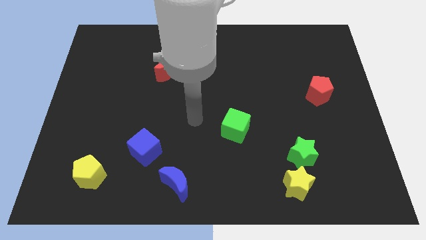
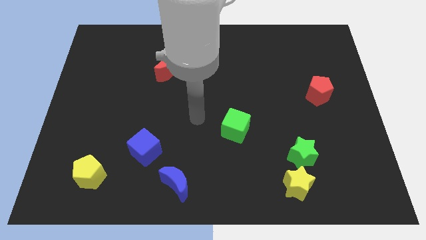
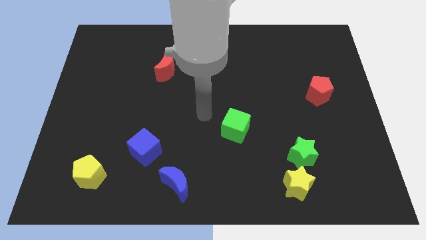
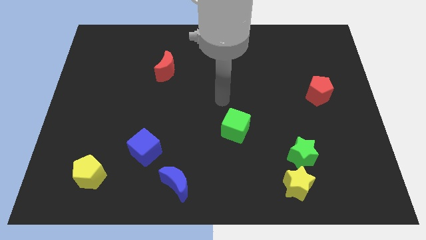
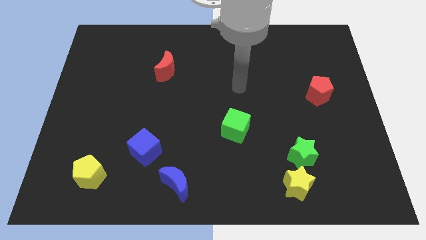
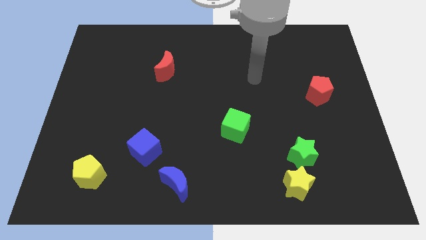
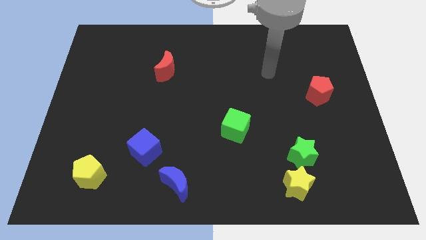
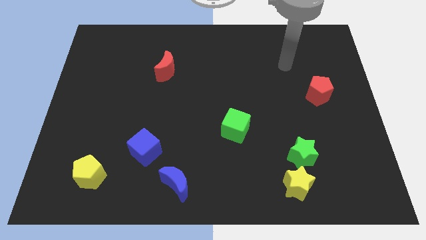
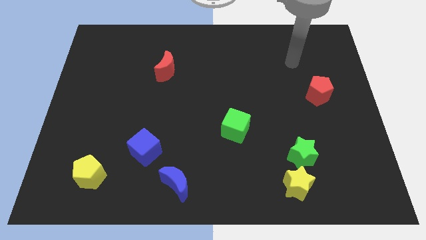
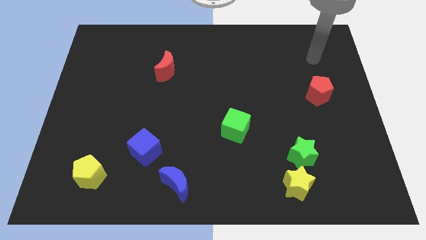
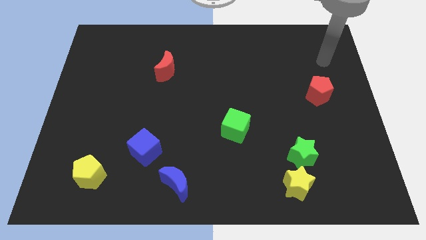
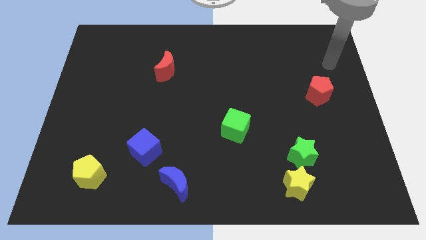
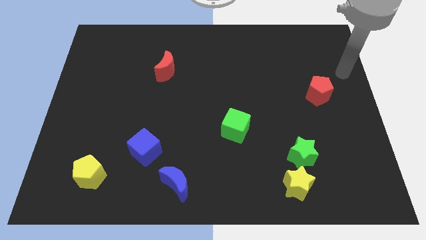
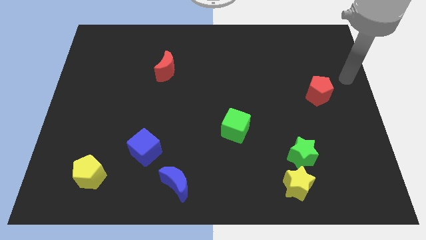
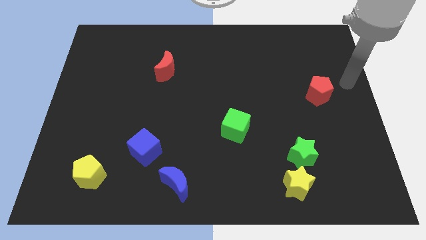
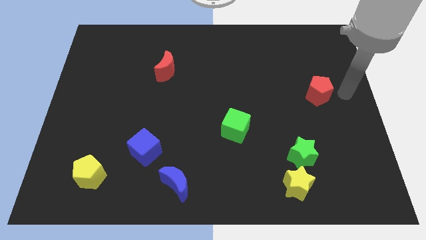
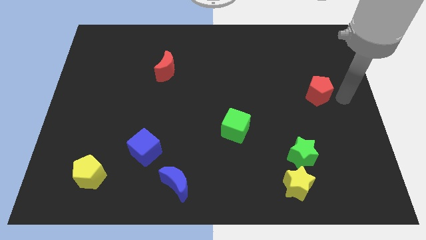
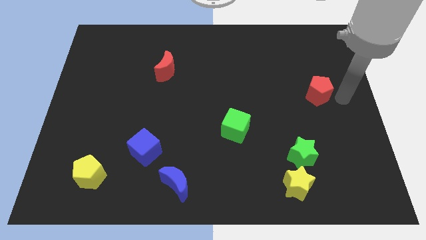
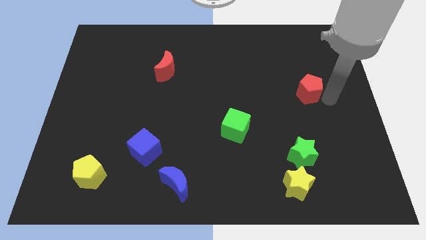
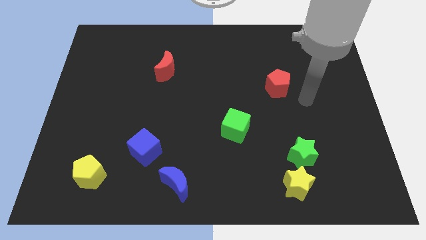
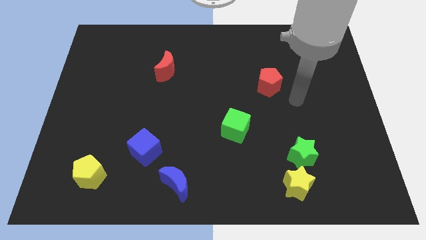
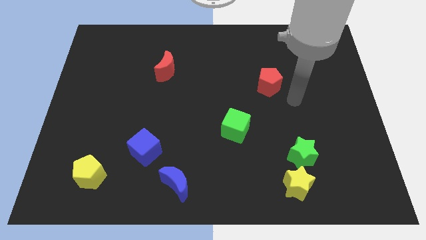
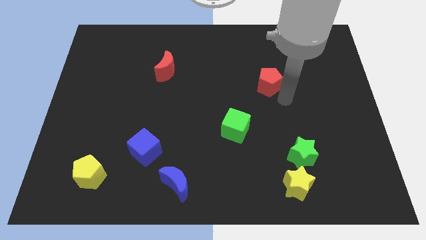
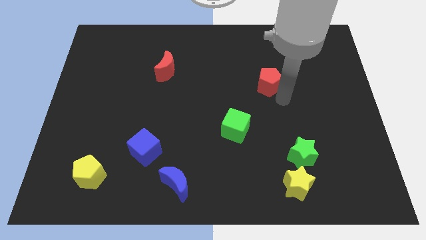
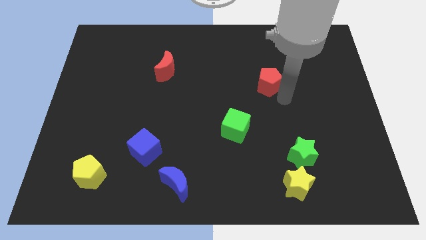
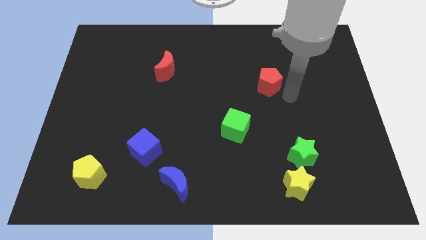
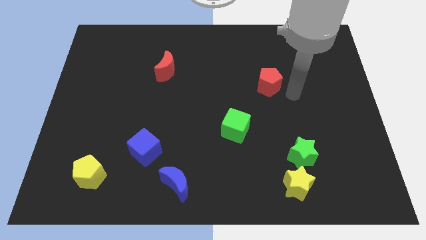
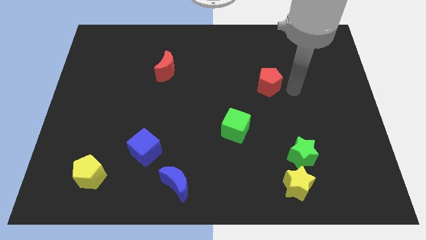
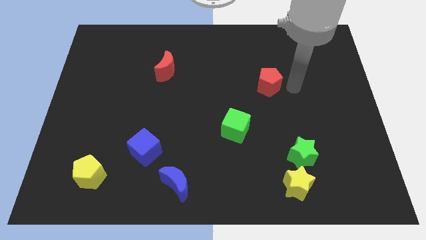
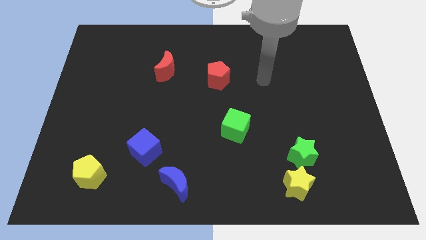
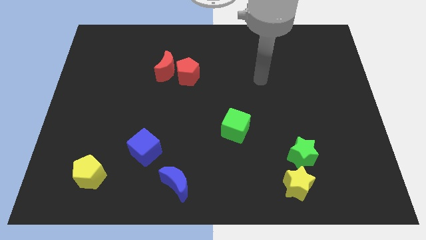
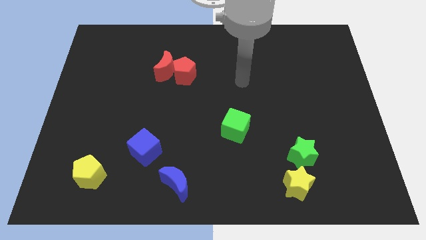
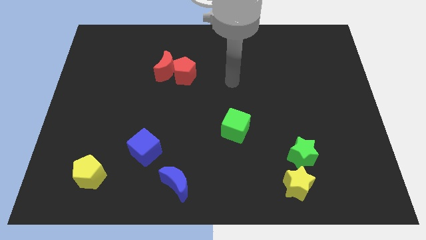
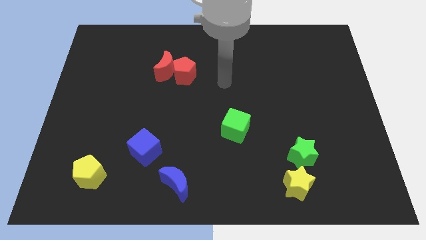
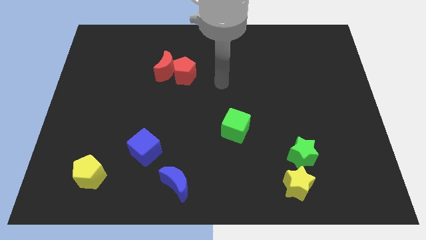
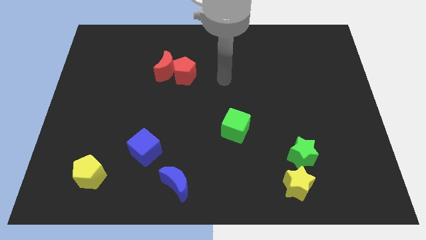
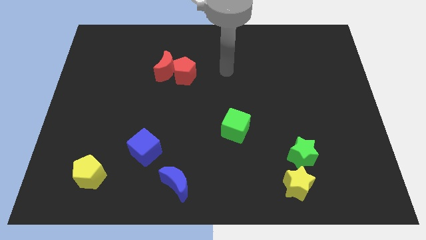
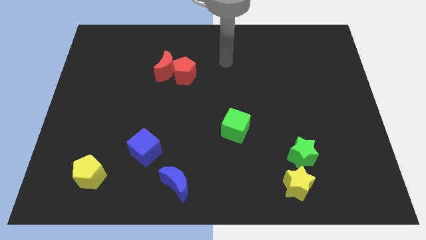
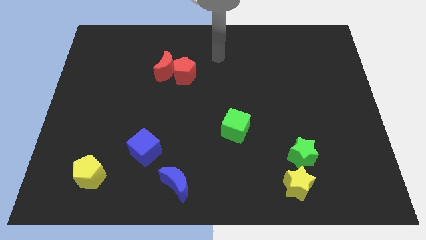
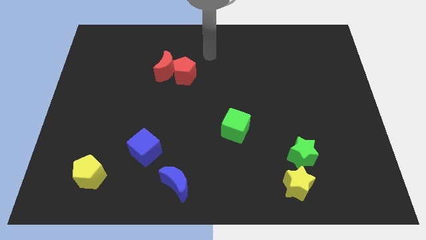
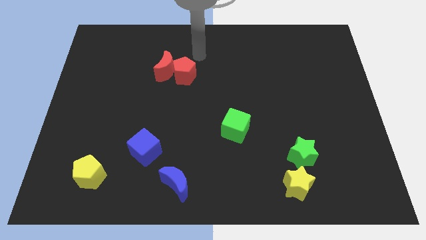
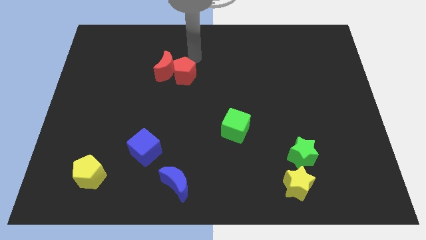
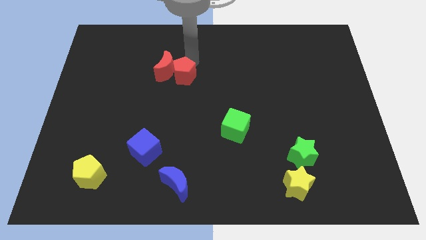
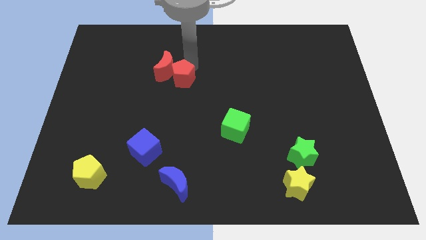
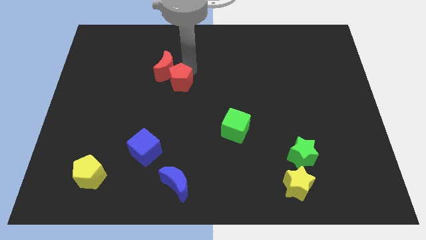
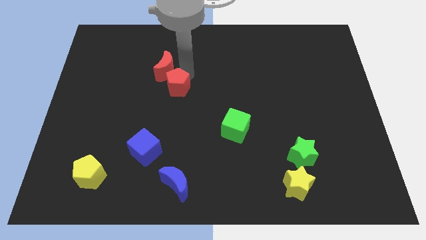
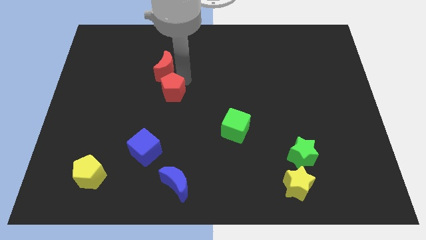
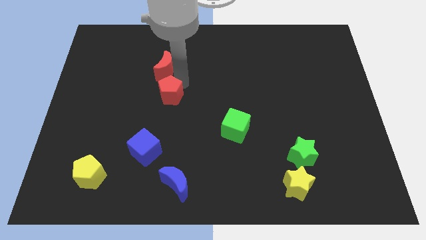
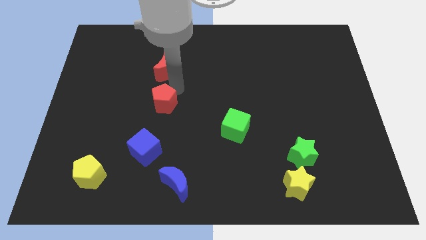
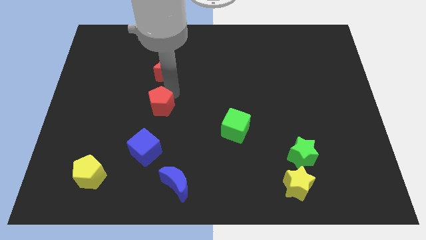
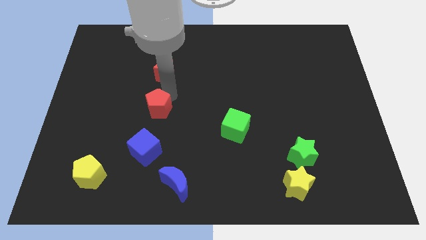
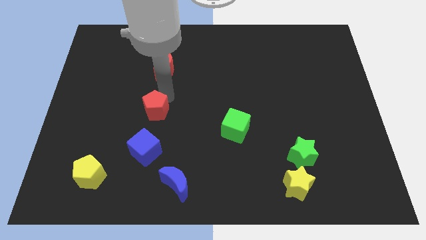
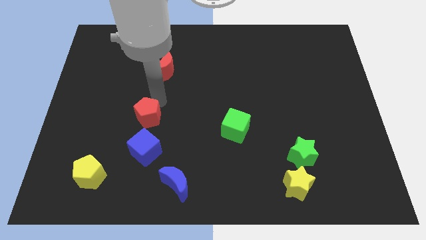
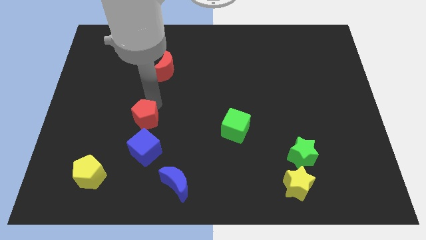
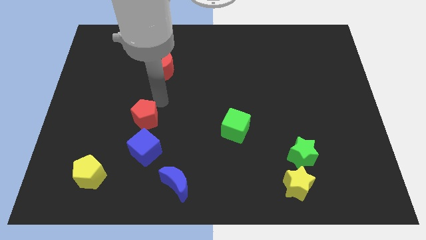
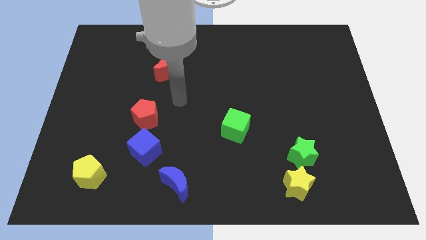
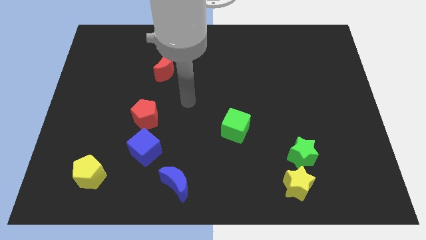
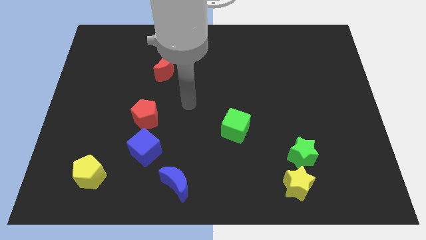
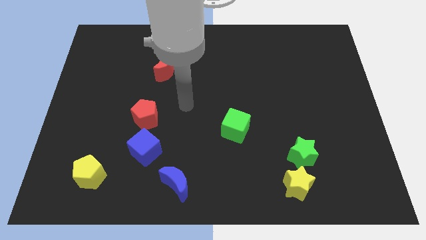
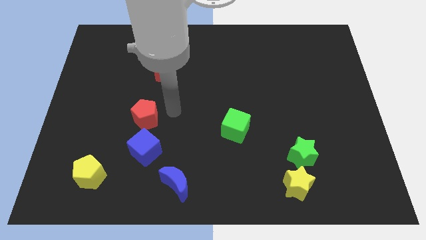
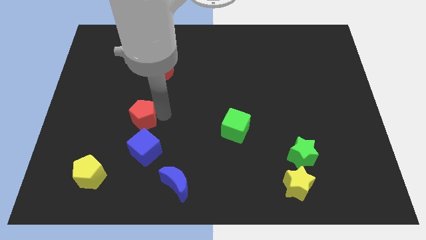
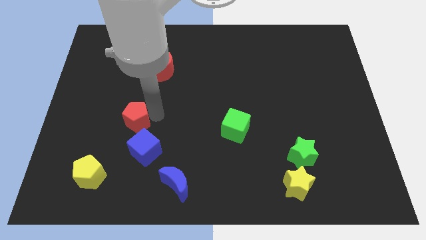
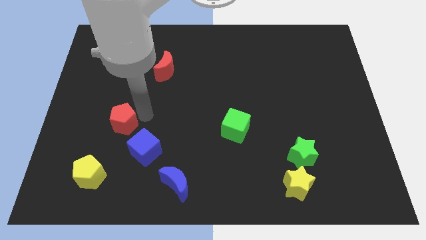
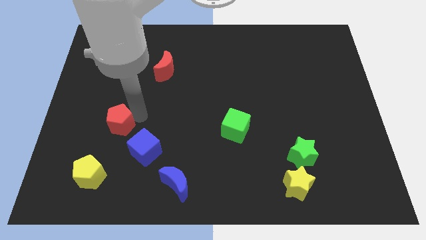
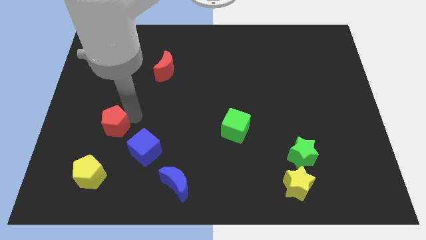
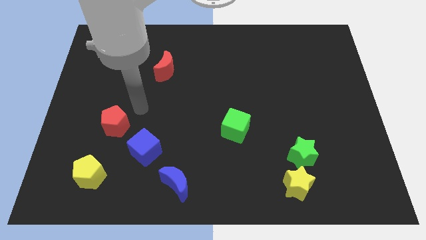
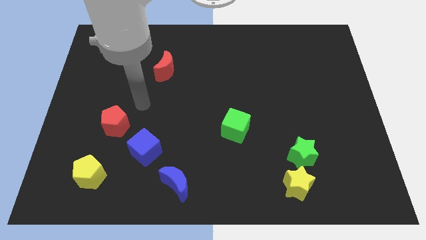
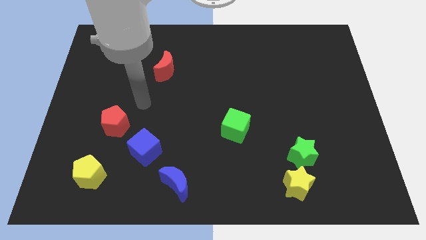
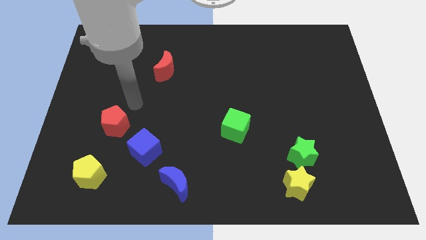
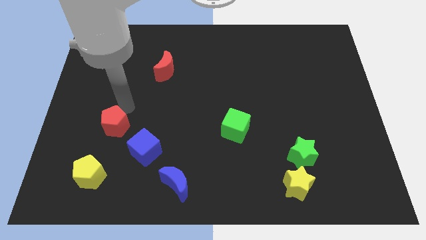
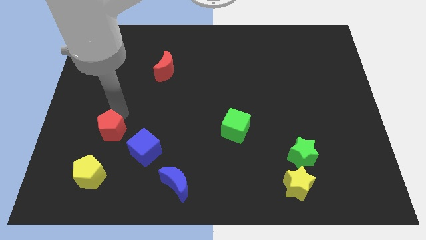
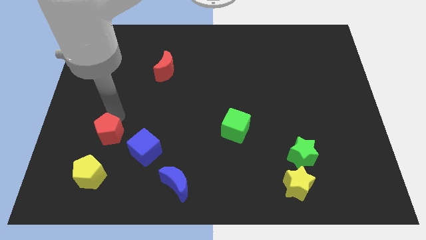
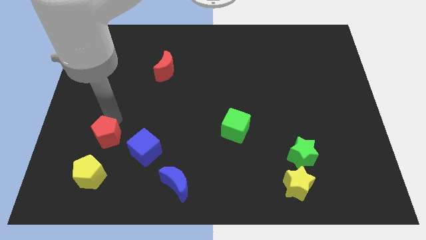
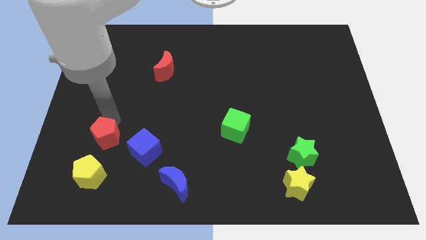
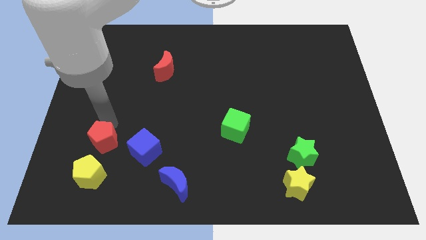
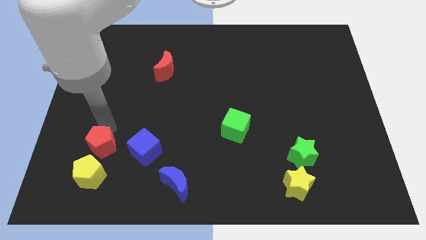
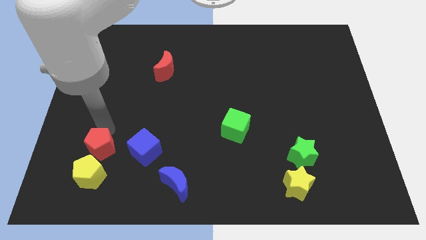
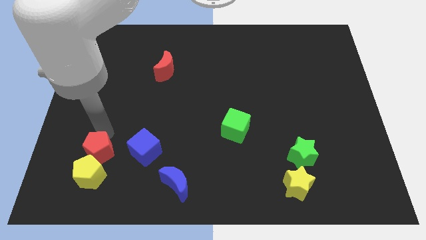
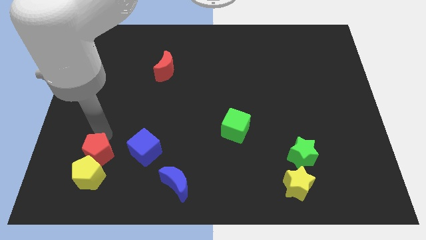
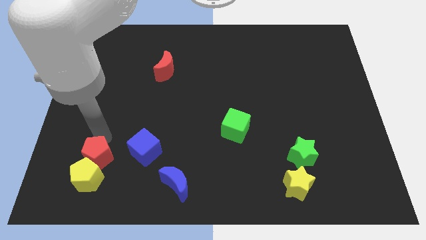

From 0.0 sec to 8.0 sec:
move the red pentagon towards the yellow pentagon

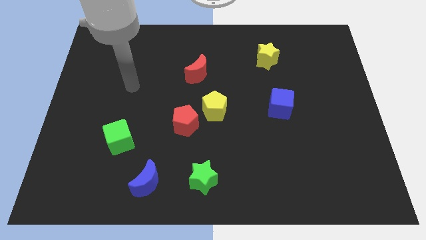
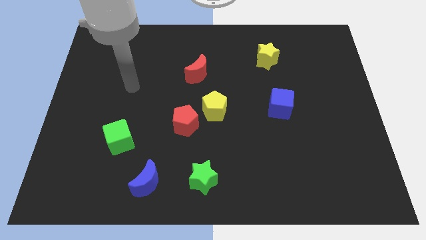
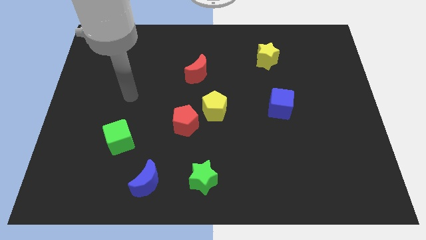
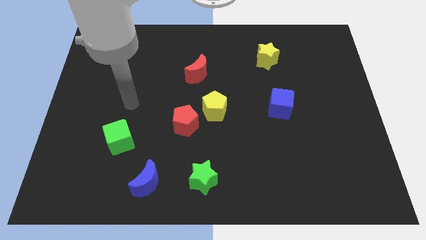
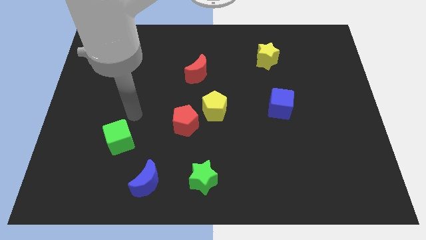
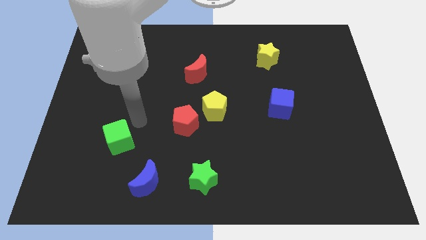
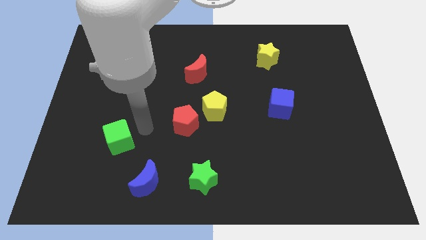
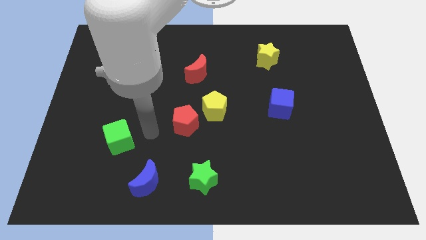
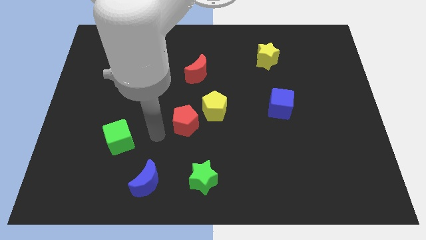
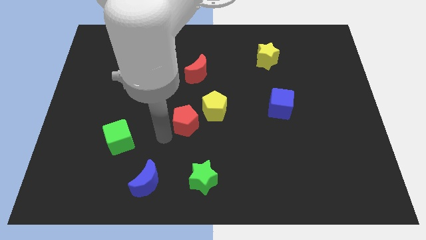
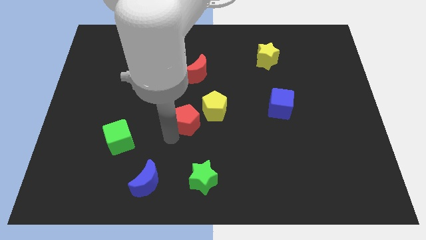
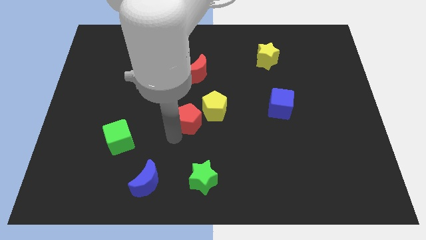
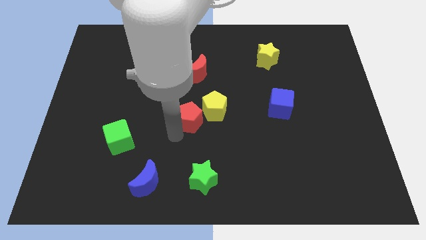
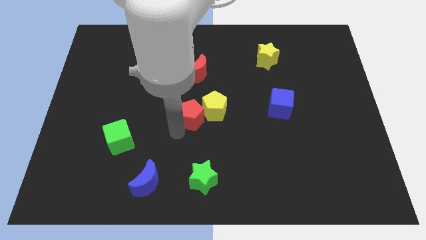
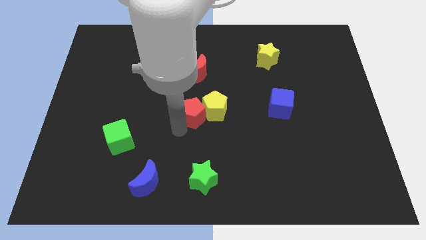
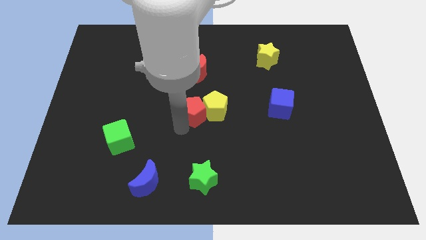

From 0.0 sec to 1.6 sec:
move the red pentagon to the yellow pentagon
